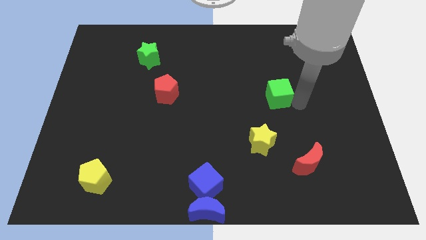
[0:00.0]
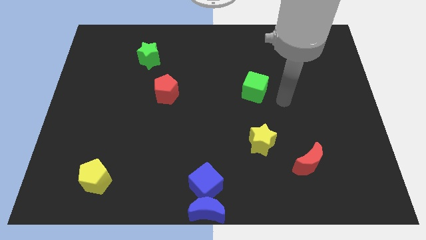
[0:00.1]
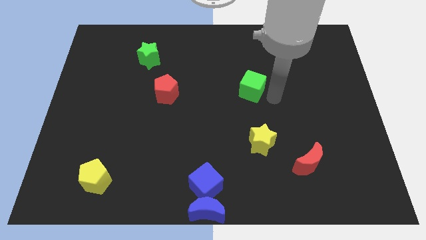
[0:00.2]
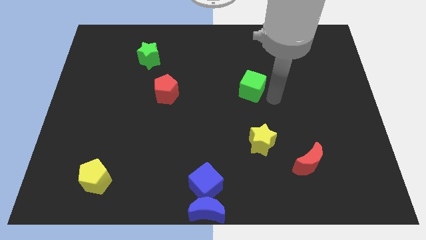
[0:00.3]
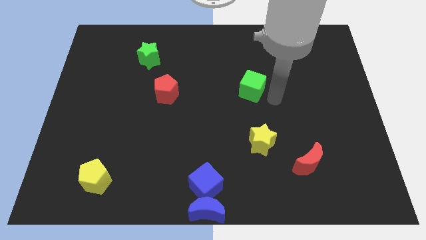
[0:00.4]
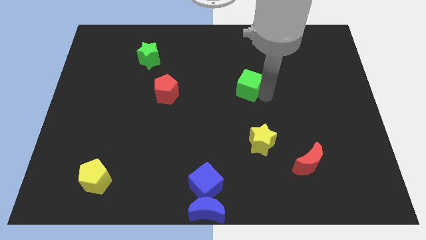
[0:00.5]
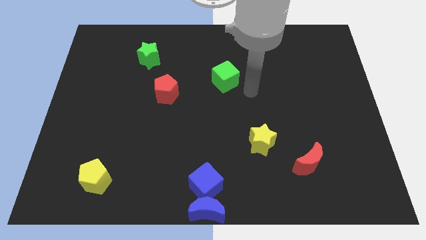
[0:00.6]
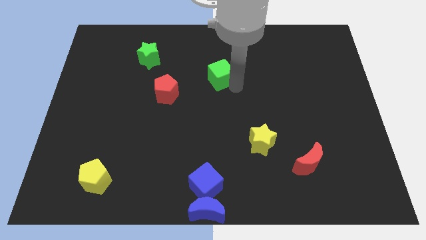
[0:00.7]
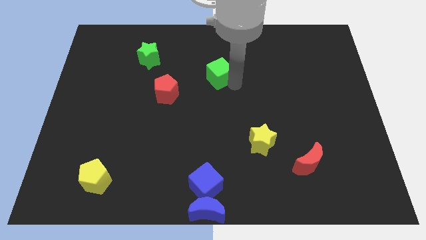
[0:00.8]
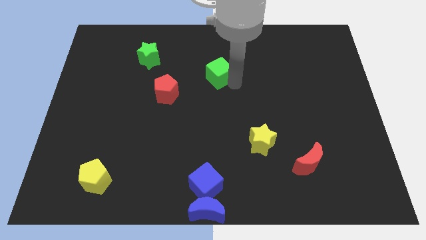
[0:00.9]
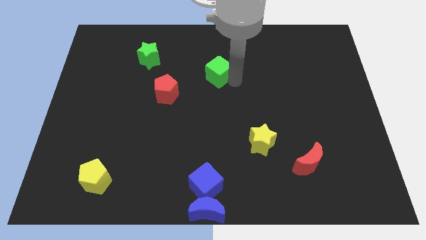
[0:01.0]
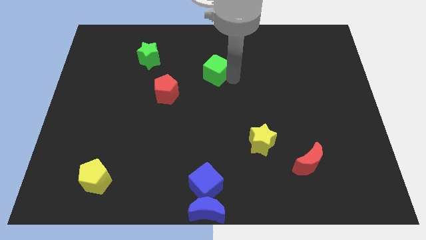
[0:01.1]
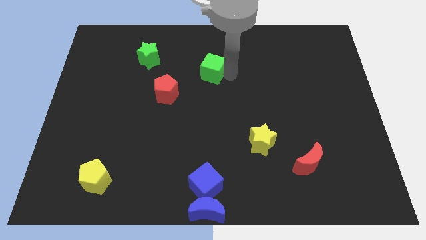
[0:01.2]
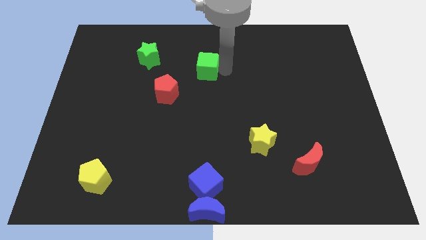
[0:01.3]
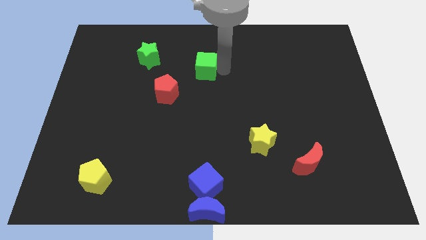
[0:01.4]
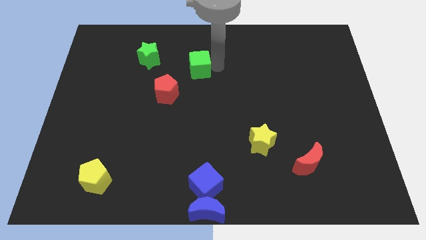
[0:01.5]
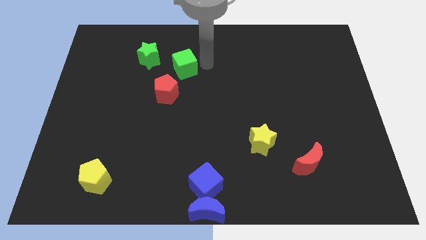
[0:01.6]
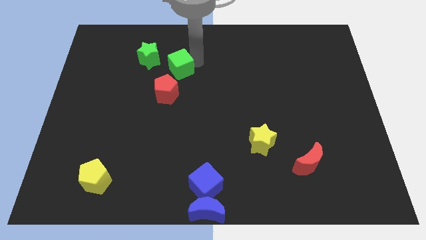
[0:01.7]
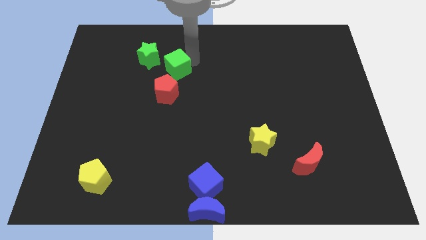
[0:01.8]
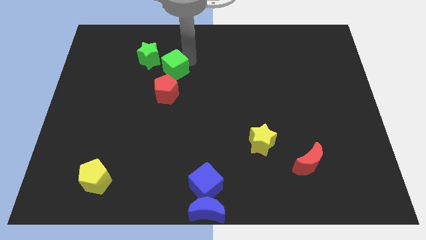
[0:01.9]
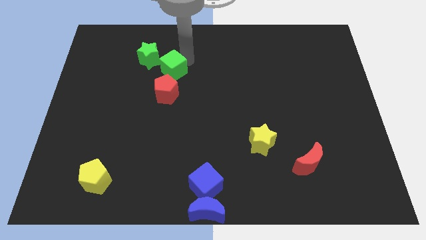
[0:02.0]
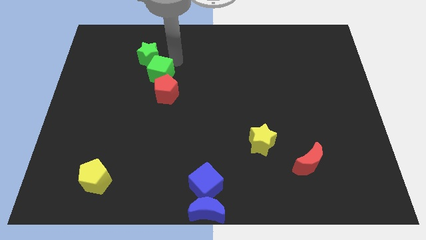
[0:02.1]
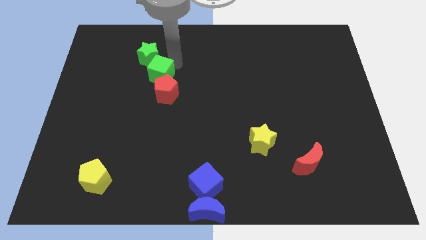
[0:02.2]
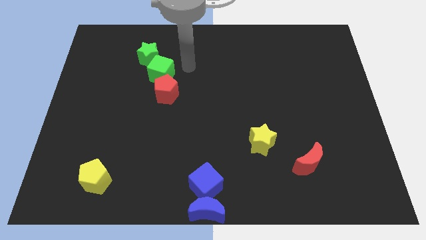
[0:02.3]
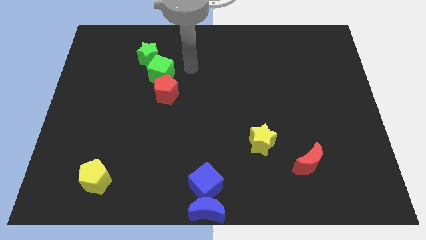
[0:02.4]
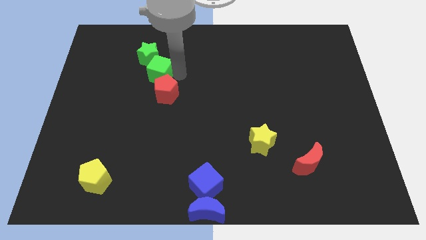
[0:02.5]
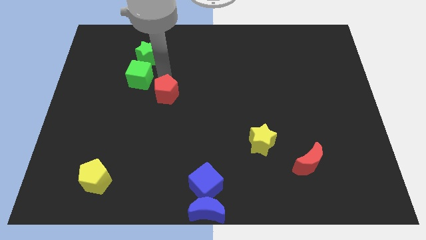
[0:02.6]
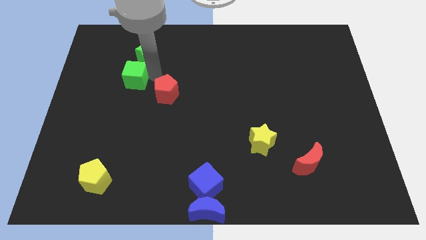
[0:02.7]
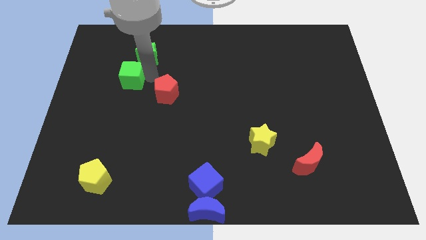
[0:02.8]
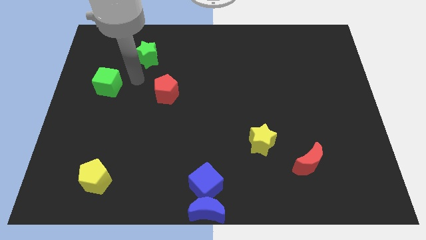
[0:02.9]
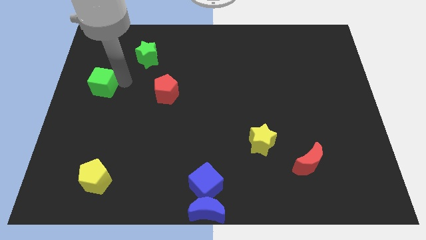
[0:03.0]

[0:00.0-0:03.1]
move the green cube to the left of the red pentagon

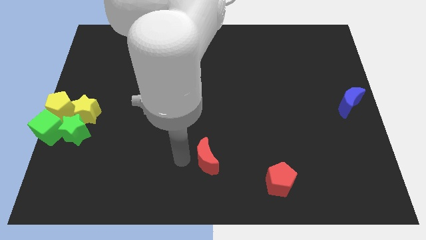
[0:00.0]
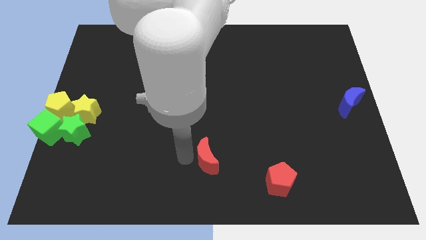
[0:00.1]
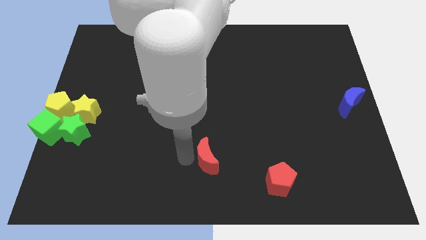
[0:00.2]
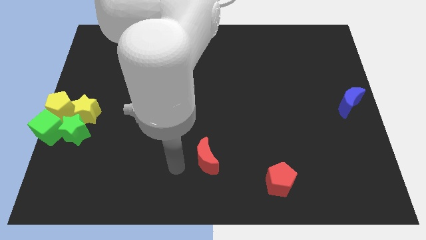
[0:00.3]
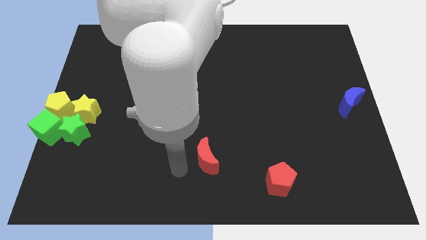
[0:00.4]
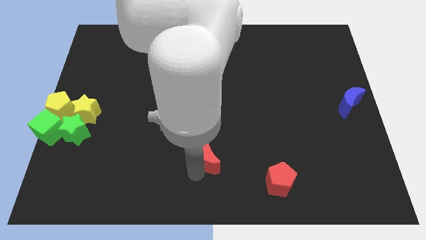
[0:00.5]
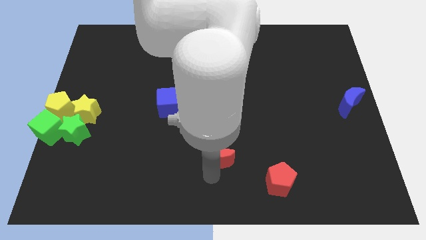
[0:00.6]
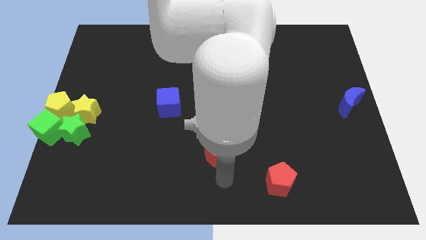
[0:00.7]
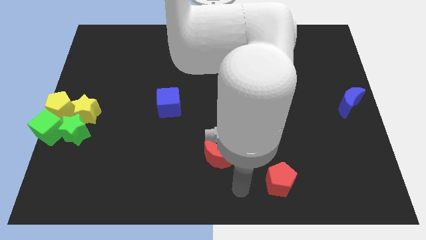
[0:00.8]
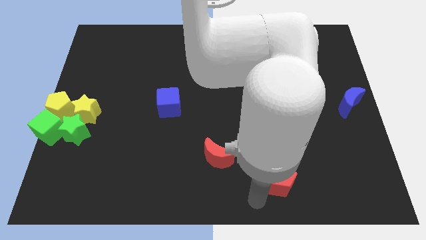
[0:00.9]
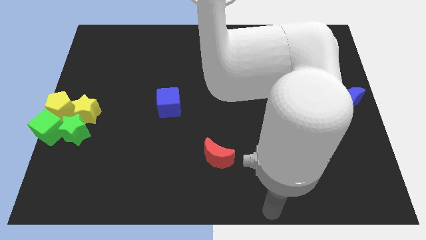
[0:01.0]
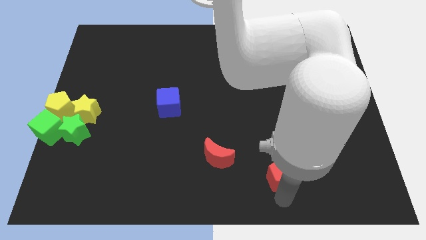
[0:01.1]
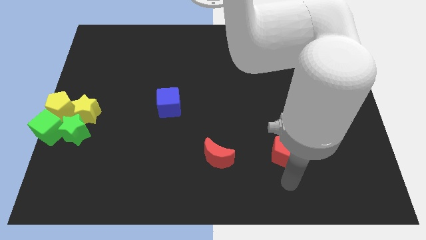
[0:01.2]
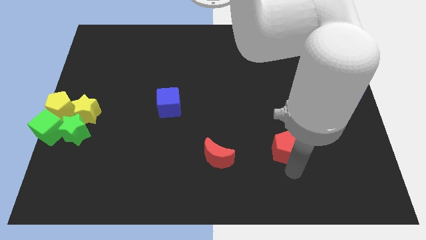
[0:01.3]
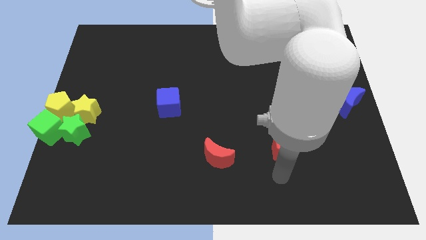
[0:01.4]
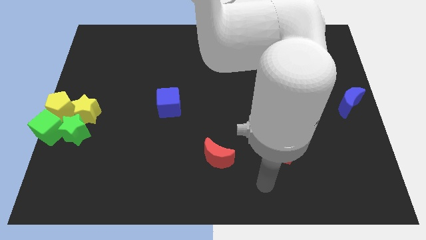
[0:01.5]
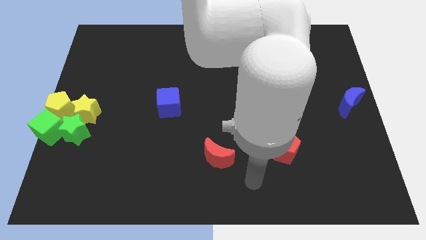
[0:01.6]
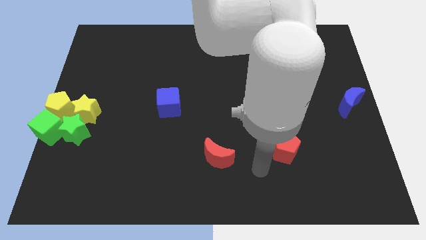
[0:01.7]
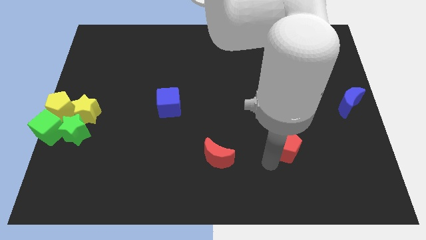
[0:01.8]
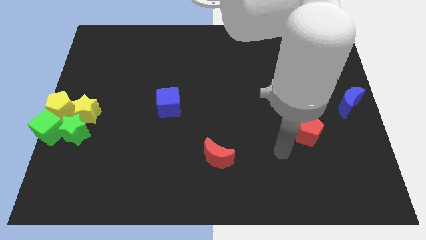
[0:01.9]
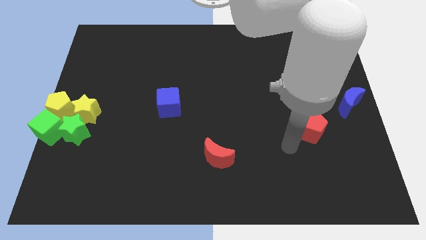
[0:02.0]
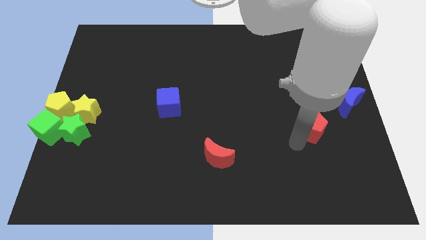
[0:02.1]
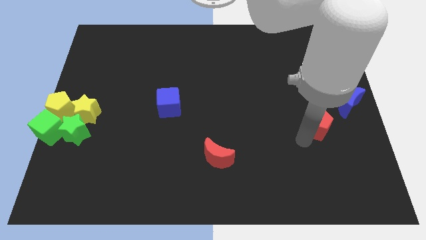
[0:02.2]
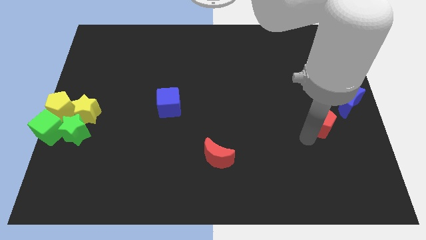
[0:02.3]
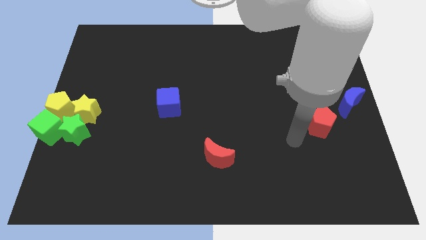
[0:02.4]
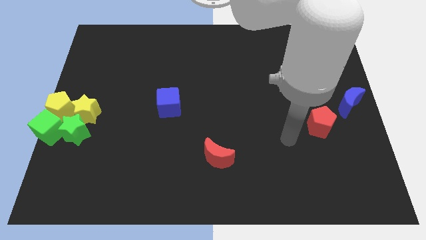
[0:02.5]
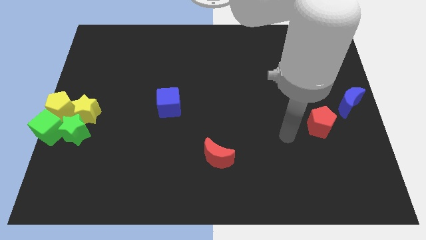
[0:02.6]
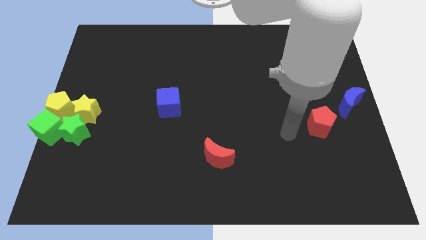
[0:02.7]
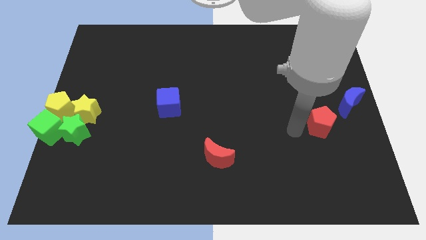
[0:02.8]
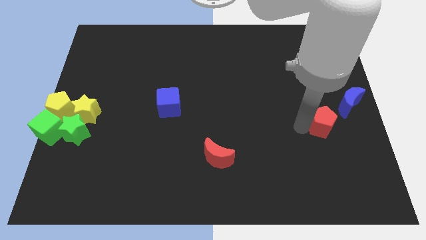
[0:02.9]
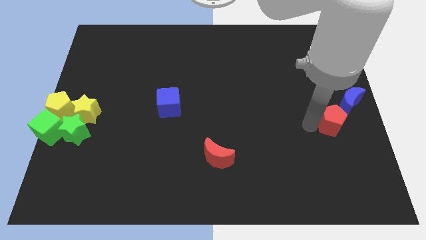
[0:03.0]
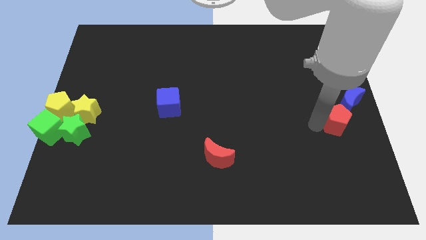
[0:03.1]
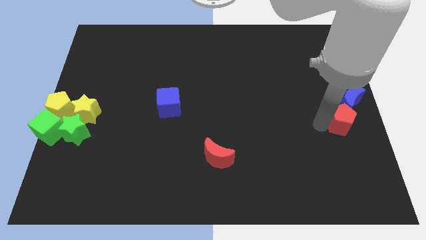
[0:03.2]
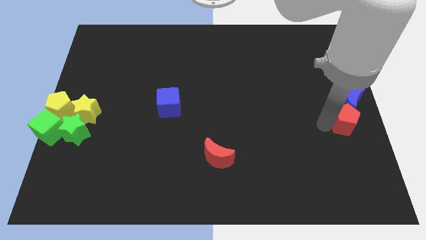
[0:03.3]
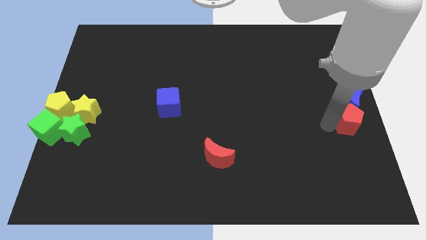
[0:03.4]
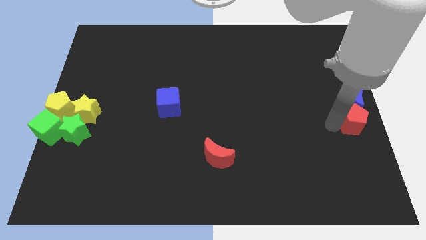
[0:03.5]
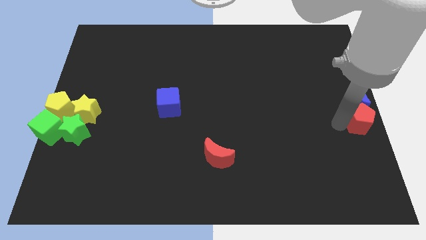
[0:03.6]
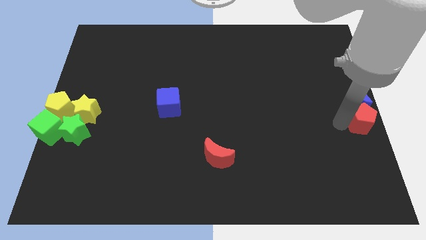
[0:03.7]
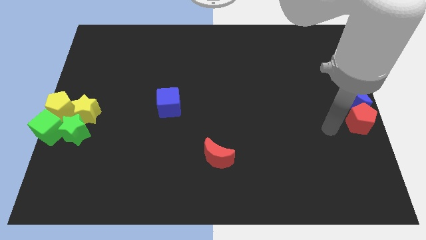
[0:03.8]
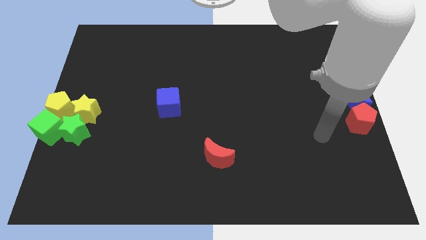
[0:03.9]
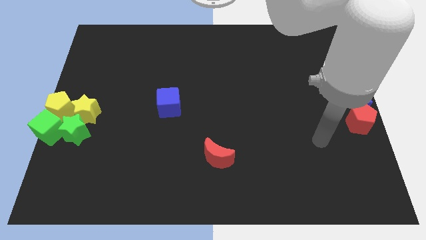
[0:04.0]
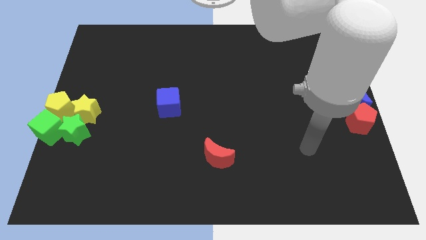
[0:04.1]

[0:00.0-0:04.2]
move the red pentagon to the center right of the board

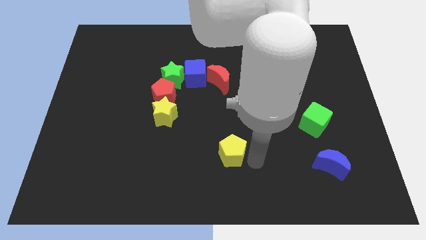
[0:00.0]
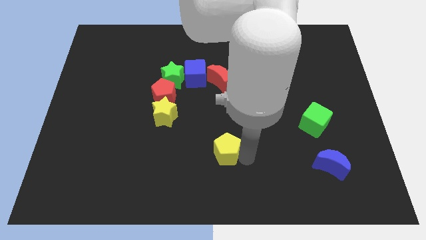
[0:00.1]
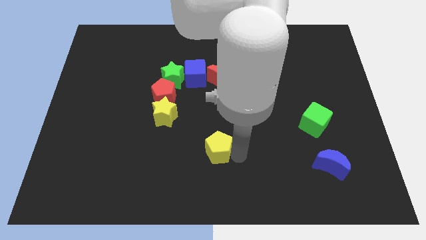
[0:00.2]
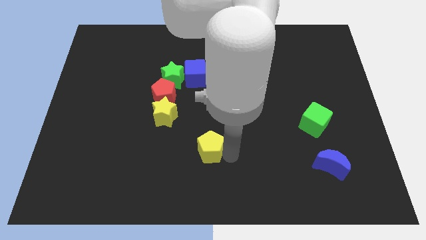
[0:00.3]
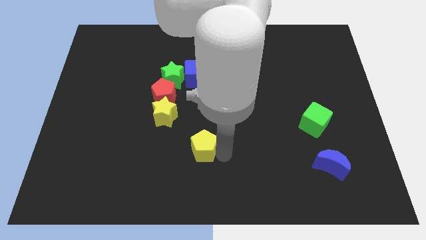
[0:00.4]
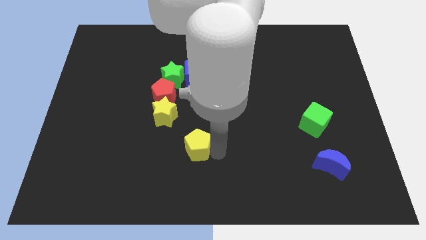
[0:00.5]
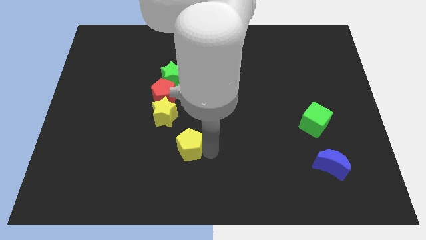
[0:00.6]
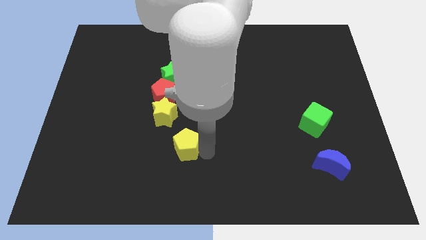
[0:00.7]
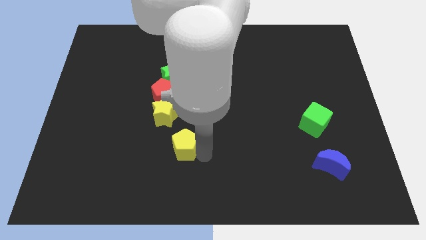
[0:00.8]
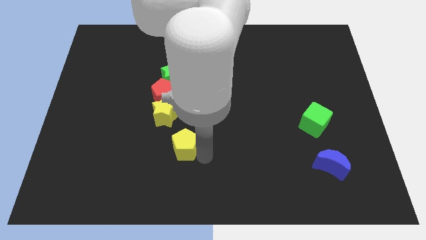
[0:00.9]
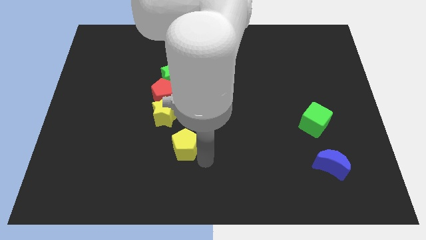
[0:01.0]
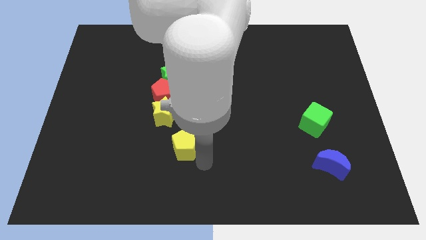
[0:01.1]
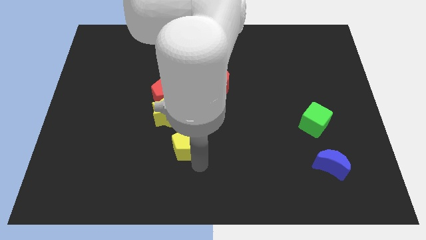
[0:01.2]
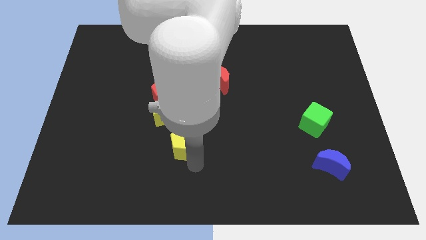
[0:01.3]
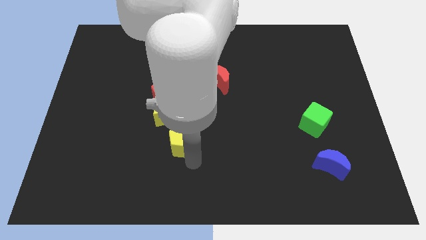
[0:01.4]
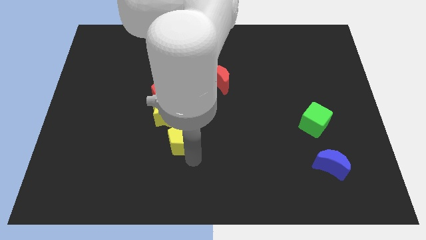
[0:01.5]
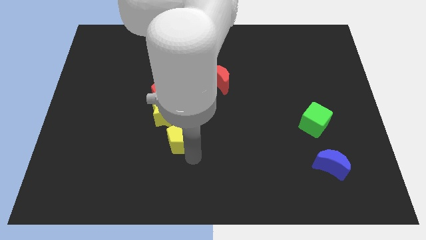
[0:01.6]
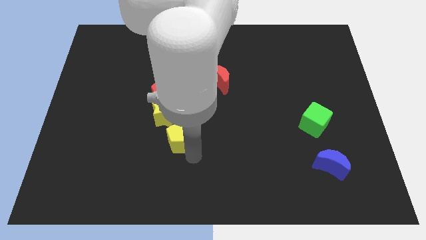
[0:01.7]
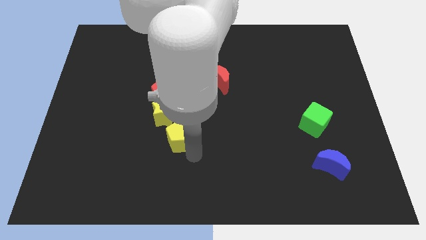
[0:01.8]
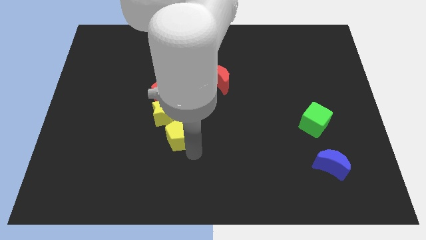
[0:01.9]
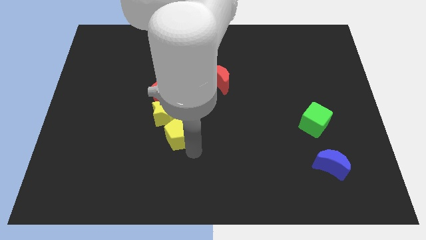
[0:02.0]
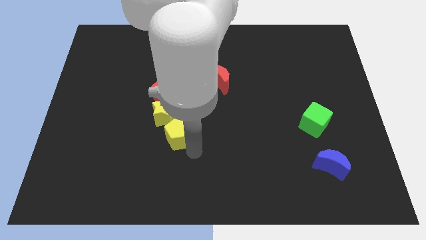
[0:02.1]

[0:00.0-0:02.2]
place the yellow pentagon diagonally to the bottom right of the yellow star
